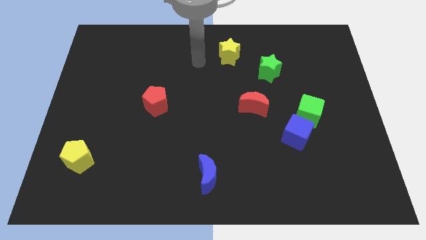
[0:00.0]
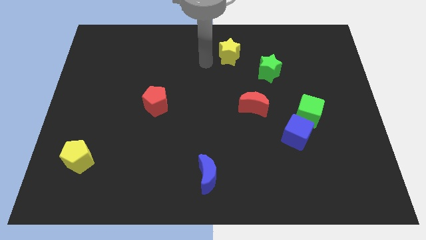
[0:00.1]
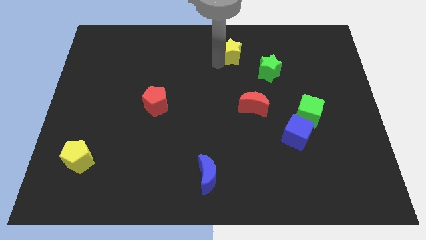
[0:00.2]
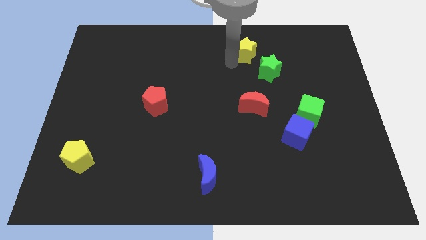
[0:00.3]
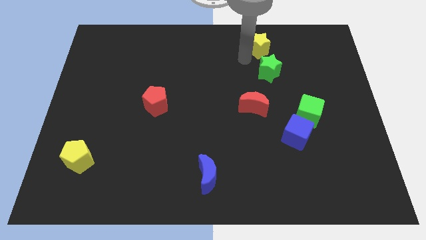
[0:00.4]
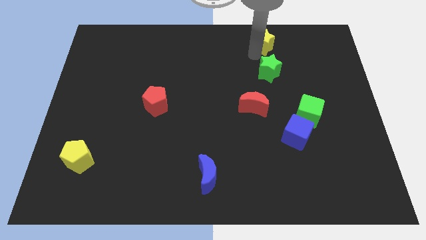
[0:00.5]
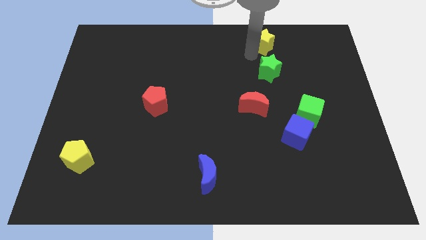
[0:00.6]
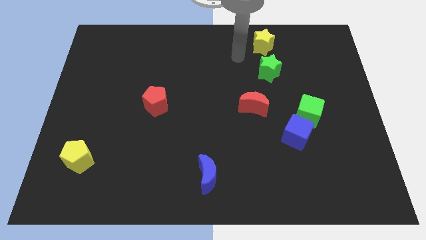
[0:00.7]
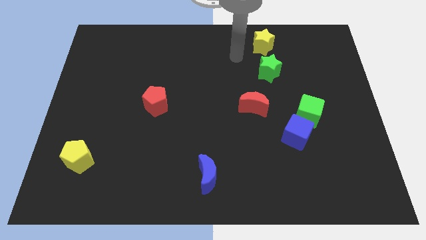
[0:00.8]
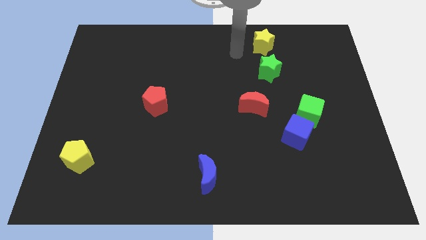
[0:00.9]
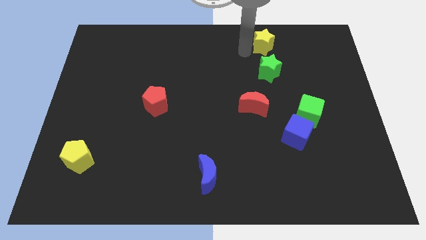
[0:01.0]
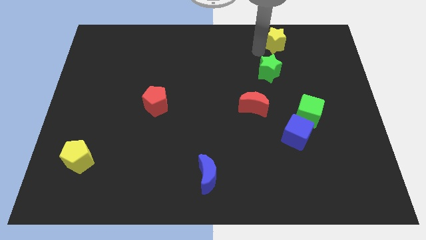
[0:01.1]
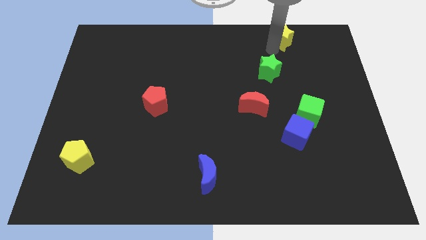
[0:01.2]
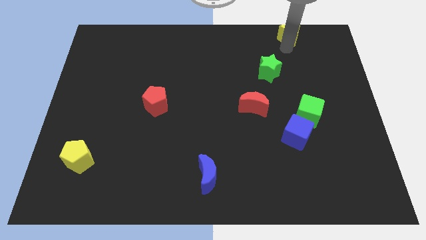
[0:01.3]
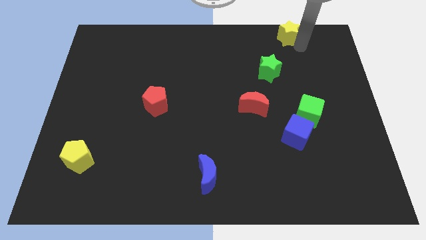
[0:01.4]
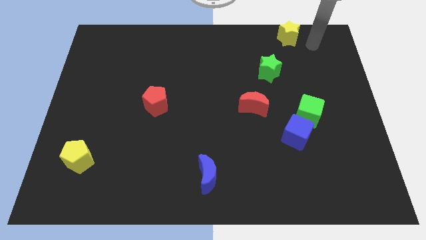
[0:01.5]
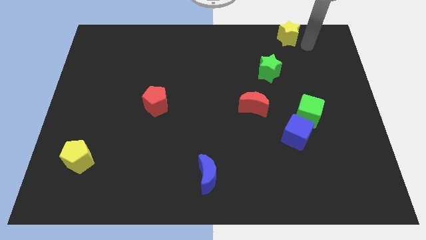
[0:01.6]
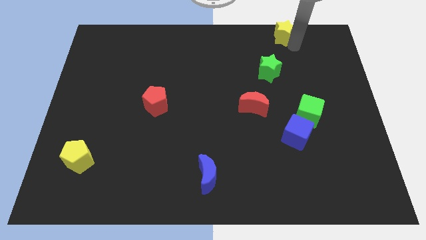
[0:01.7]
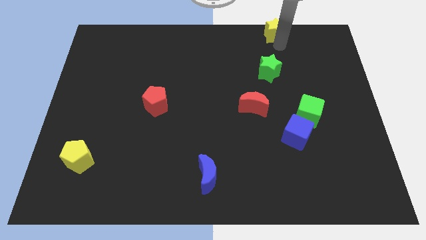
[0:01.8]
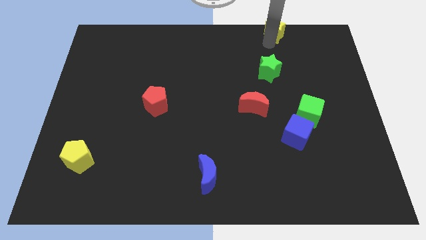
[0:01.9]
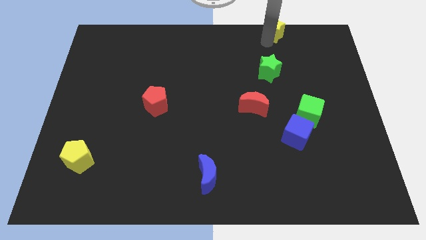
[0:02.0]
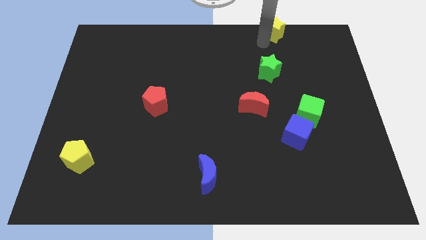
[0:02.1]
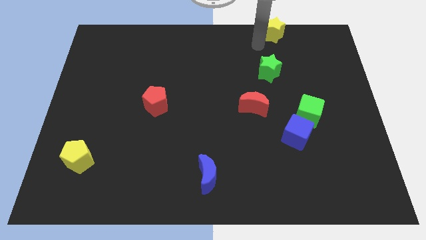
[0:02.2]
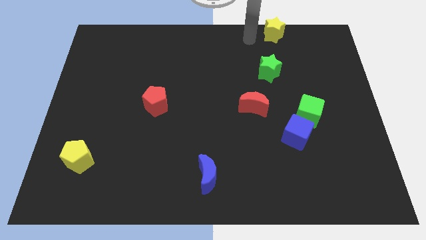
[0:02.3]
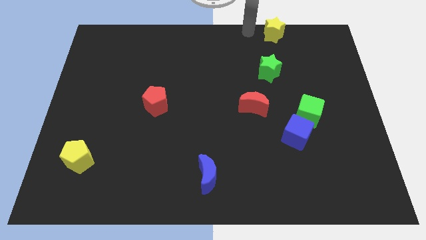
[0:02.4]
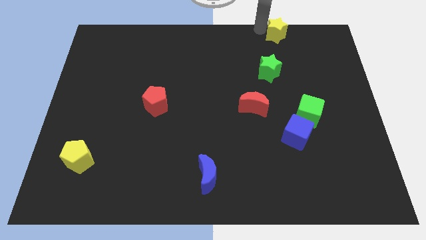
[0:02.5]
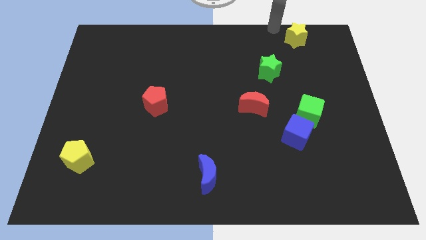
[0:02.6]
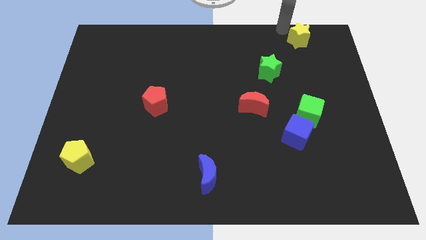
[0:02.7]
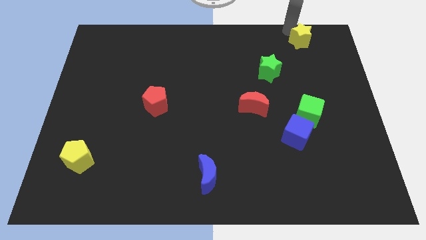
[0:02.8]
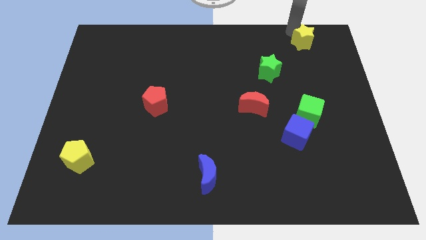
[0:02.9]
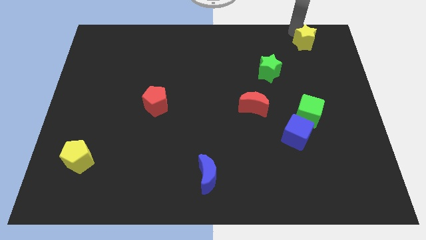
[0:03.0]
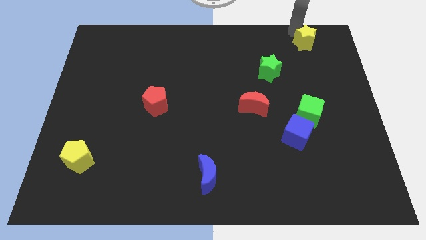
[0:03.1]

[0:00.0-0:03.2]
move the yellow star to the top of green cube

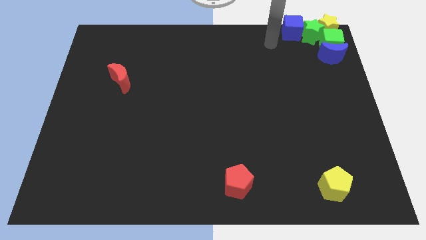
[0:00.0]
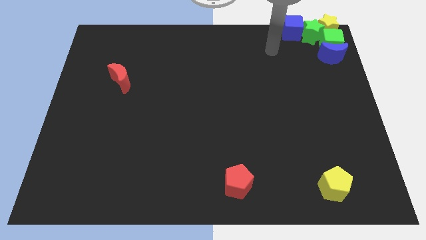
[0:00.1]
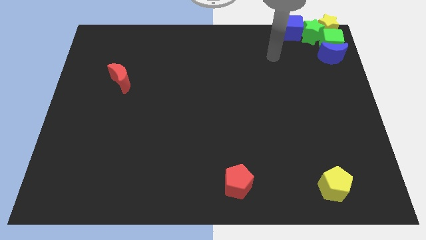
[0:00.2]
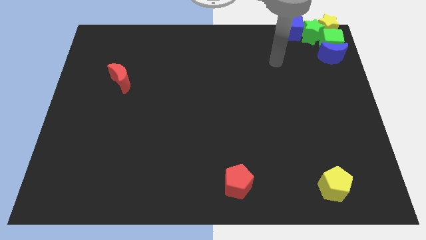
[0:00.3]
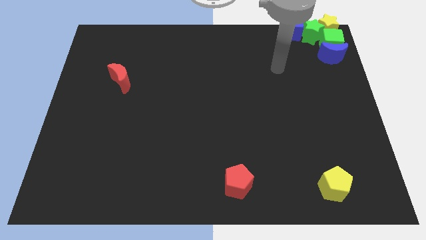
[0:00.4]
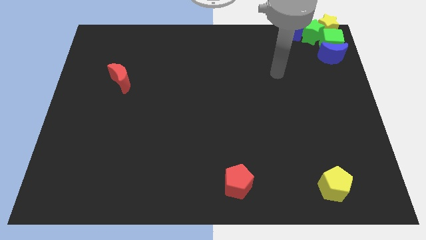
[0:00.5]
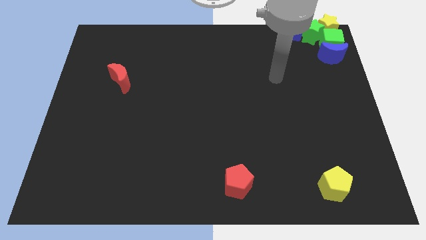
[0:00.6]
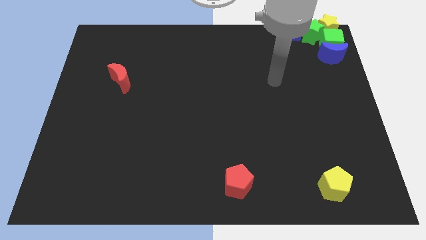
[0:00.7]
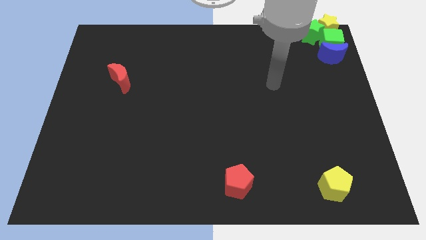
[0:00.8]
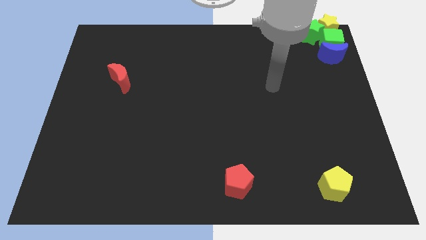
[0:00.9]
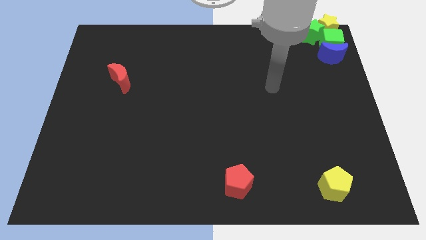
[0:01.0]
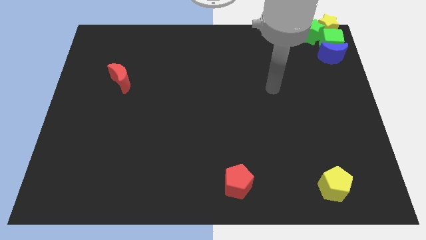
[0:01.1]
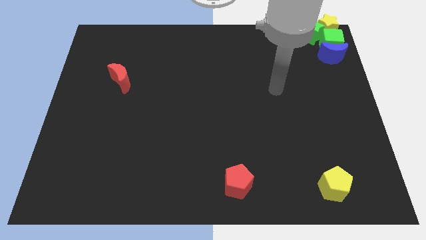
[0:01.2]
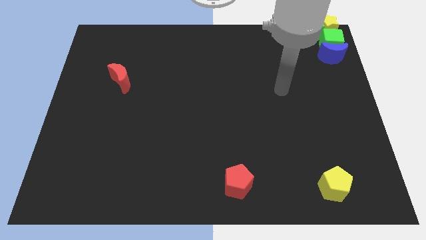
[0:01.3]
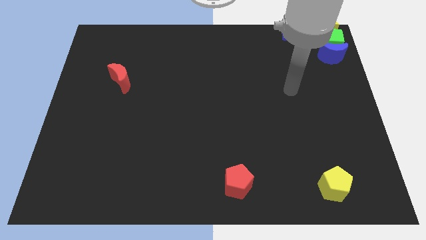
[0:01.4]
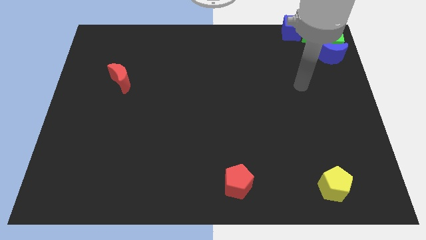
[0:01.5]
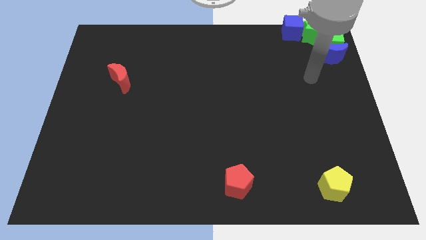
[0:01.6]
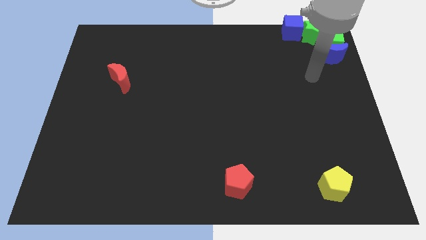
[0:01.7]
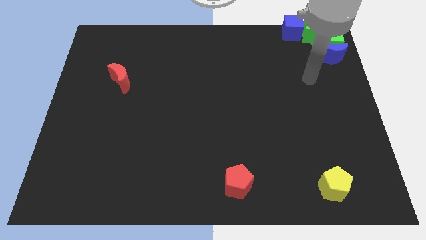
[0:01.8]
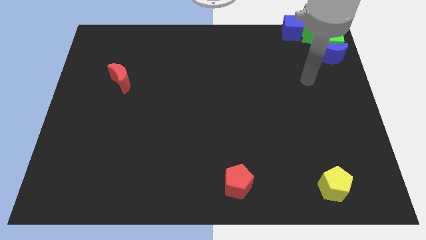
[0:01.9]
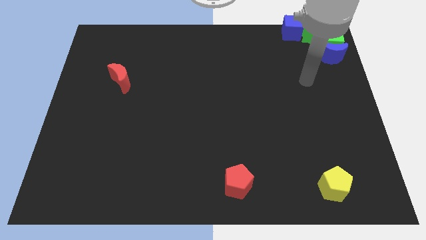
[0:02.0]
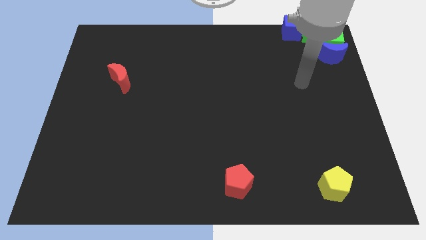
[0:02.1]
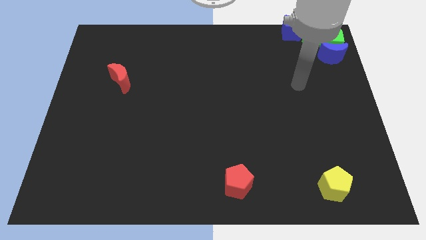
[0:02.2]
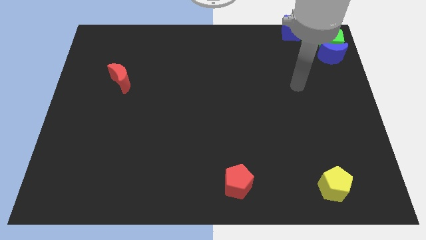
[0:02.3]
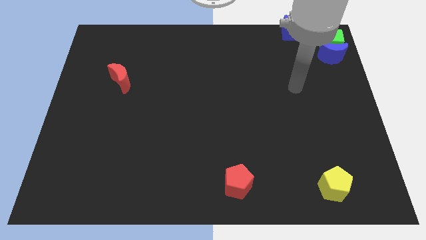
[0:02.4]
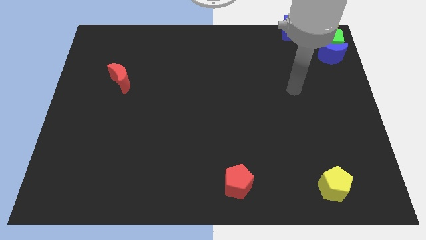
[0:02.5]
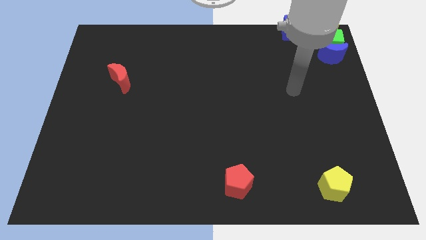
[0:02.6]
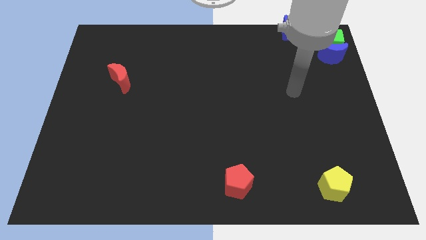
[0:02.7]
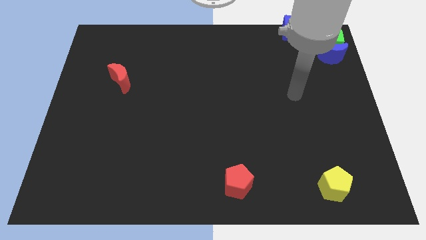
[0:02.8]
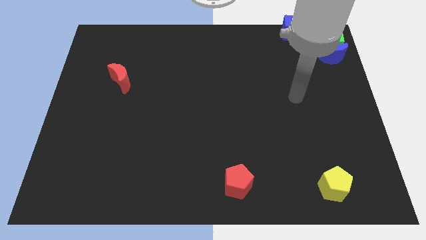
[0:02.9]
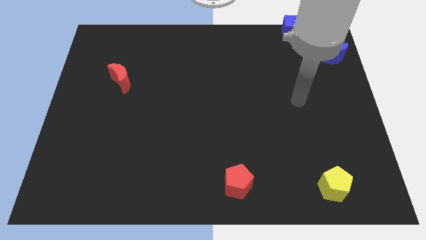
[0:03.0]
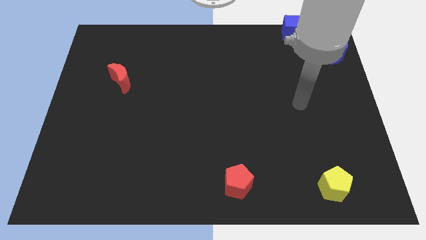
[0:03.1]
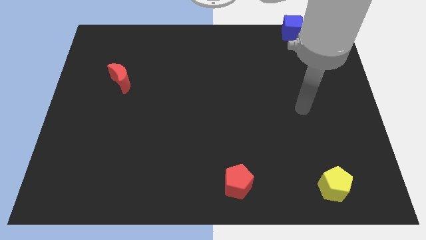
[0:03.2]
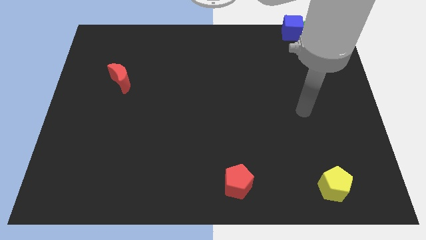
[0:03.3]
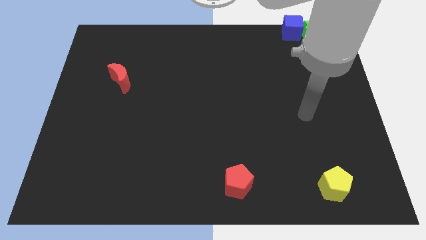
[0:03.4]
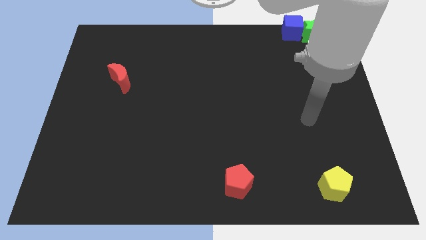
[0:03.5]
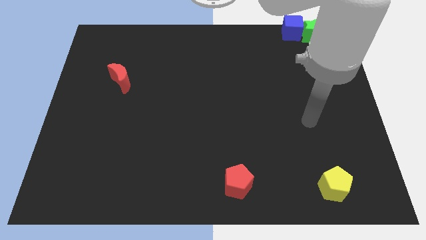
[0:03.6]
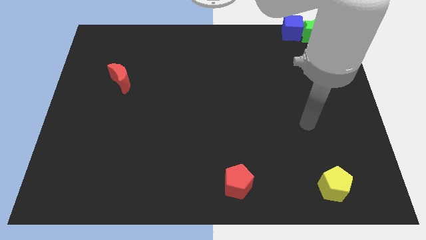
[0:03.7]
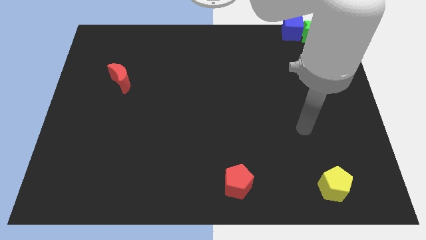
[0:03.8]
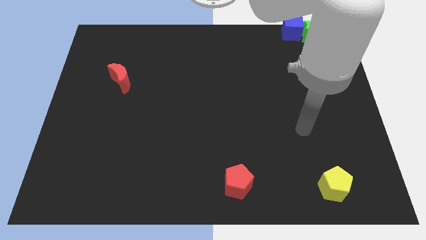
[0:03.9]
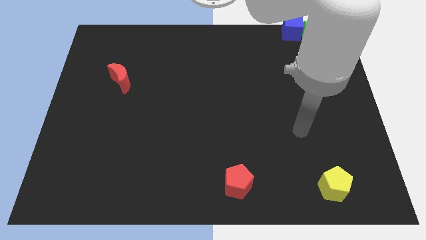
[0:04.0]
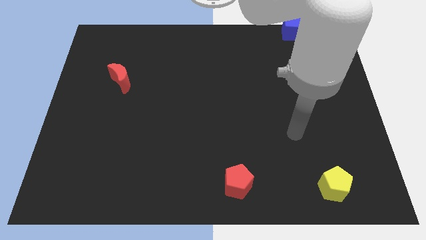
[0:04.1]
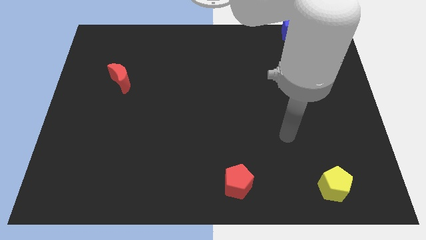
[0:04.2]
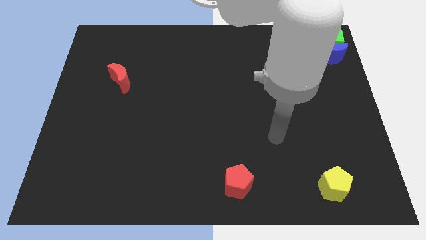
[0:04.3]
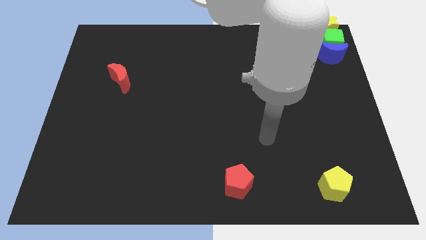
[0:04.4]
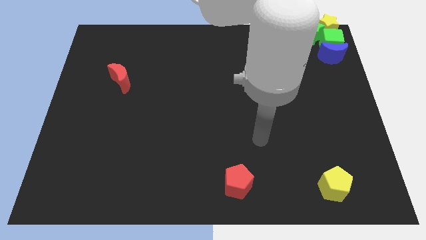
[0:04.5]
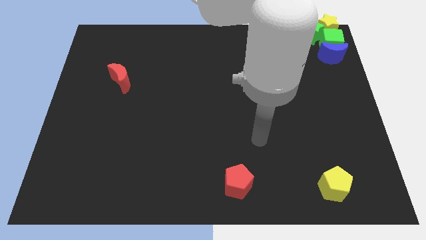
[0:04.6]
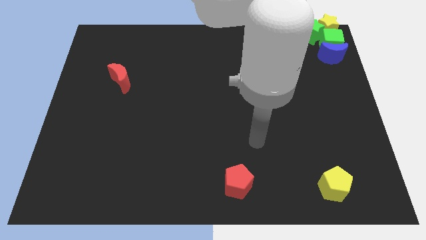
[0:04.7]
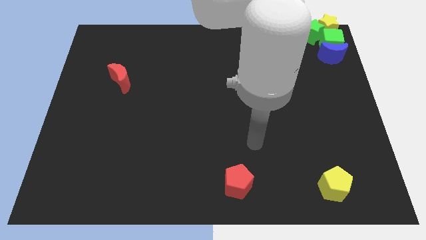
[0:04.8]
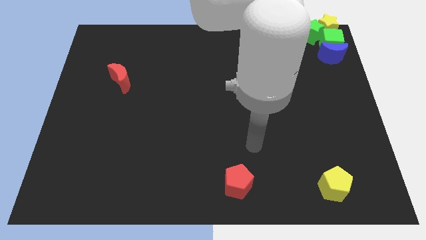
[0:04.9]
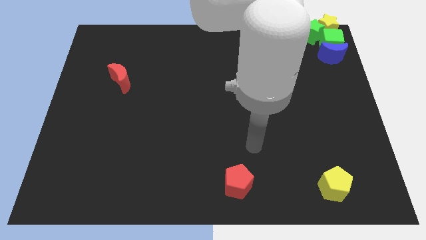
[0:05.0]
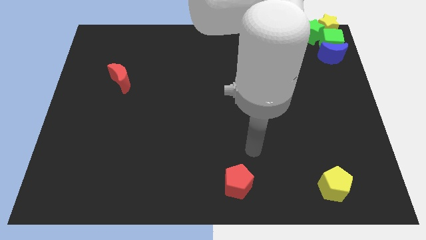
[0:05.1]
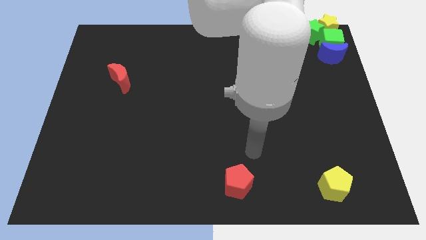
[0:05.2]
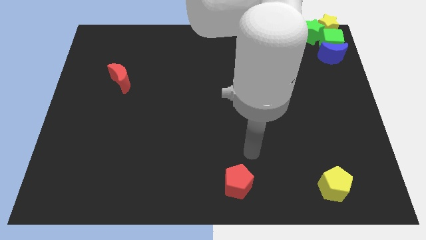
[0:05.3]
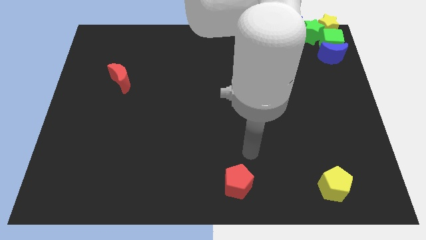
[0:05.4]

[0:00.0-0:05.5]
point your arm at the top of the red pentagon

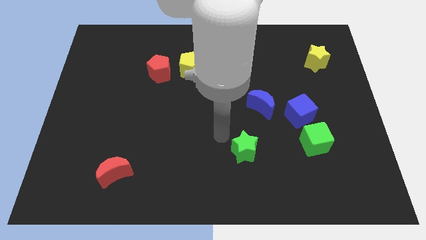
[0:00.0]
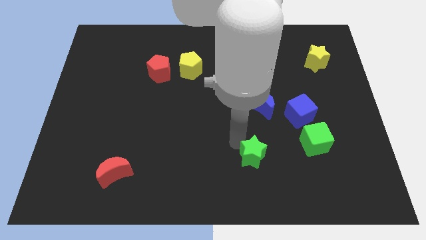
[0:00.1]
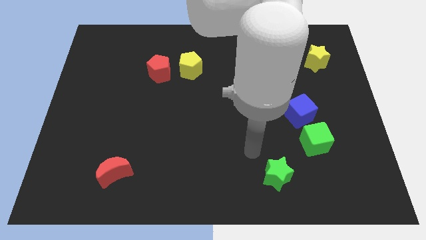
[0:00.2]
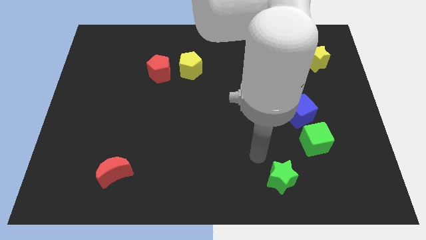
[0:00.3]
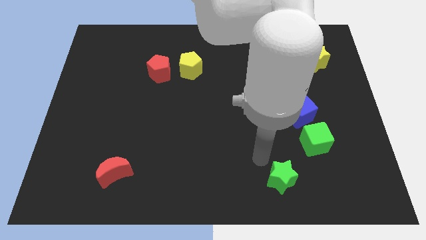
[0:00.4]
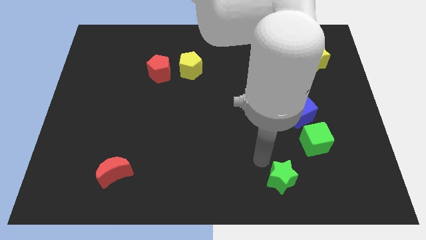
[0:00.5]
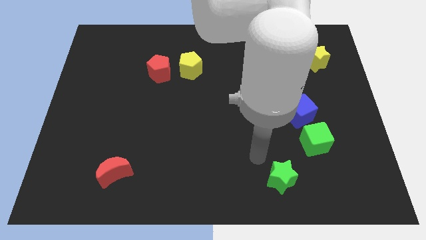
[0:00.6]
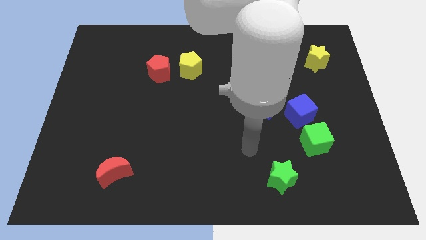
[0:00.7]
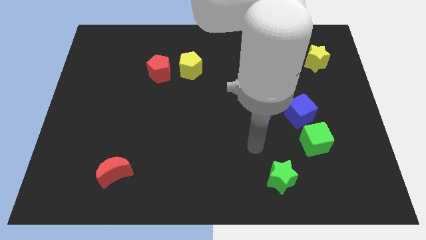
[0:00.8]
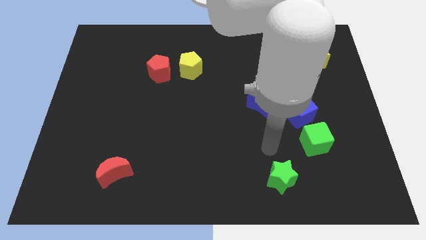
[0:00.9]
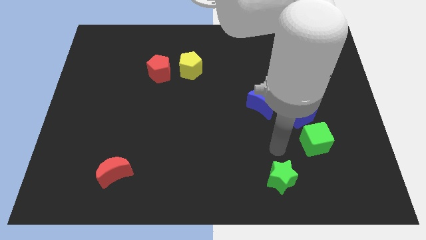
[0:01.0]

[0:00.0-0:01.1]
push the green star to the bottom of the board
